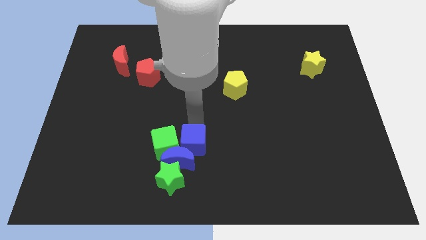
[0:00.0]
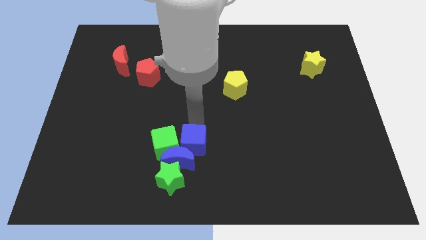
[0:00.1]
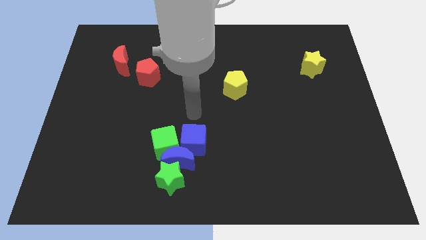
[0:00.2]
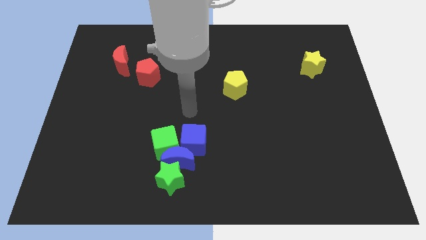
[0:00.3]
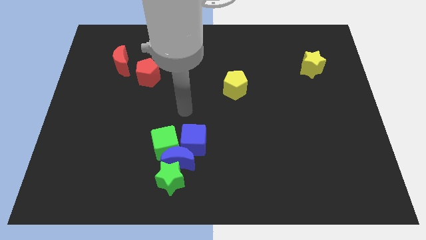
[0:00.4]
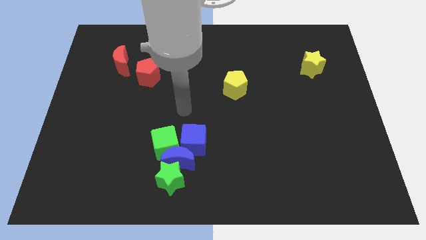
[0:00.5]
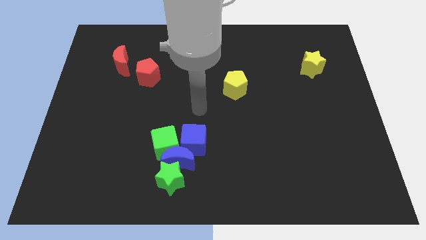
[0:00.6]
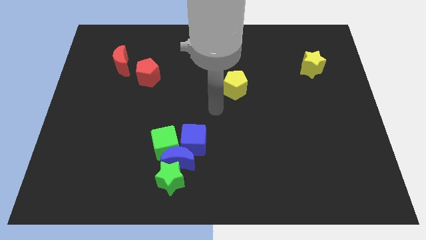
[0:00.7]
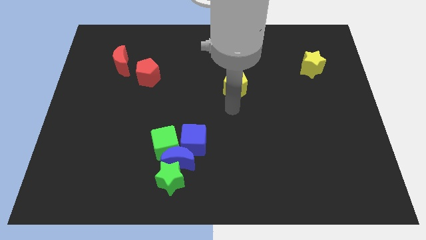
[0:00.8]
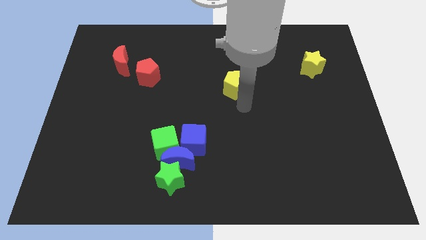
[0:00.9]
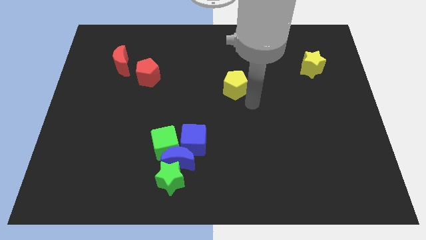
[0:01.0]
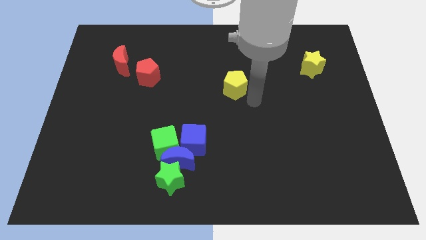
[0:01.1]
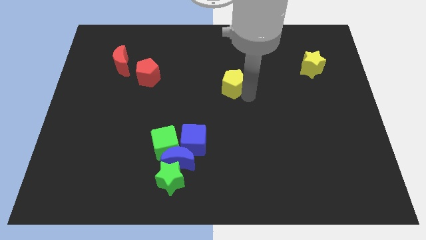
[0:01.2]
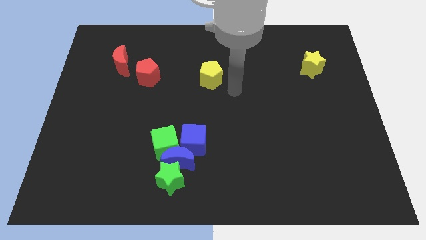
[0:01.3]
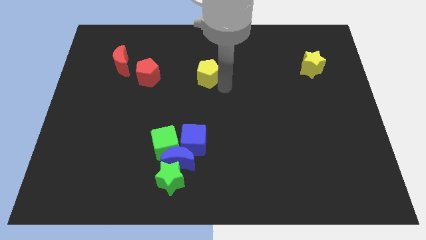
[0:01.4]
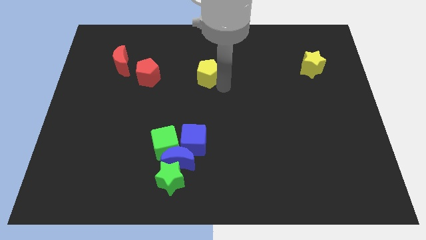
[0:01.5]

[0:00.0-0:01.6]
move the yellow pentagon to the top center of the board

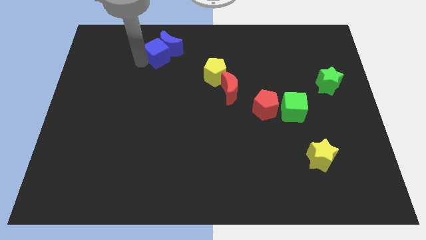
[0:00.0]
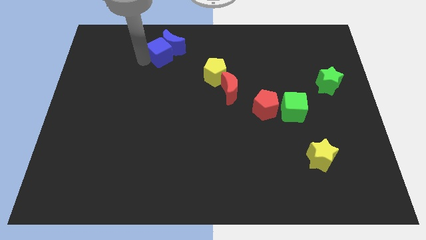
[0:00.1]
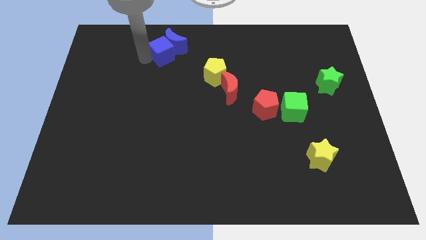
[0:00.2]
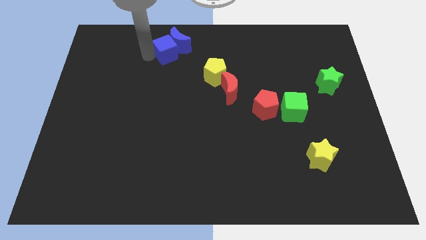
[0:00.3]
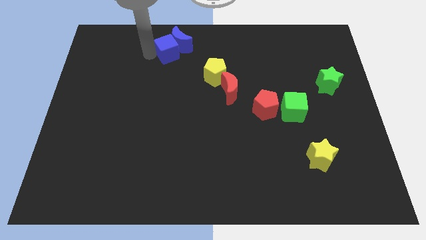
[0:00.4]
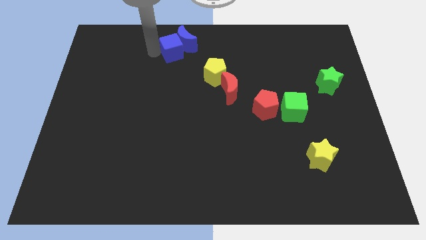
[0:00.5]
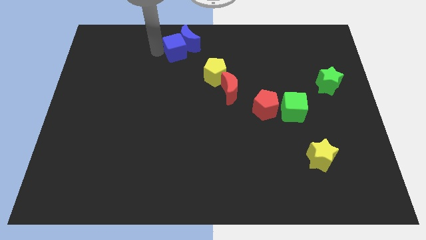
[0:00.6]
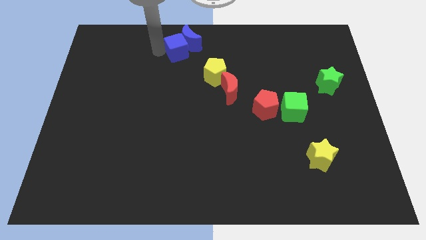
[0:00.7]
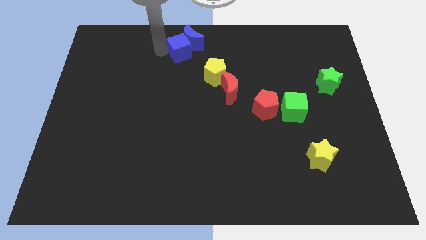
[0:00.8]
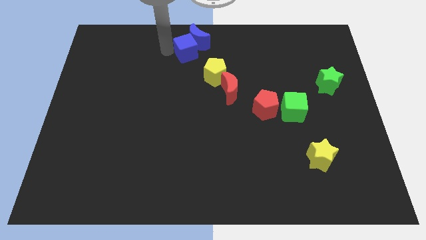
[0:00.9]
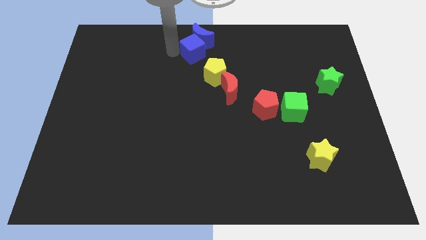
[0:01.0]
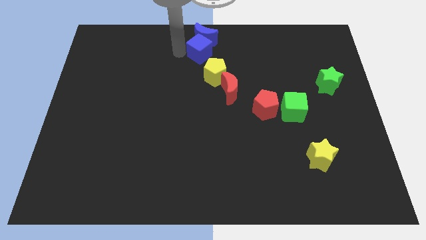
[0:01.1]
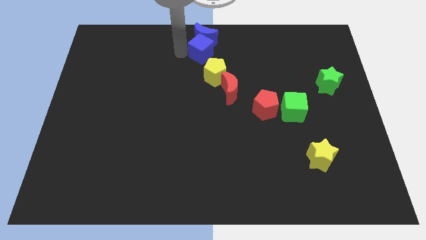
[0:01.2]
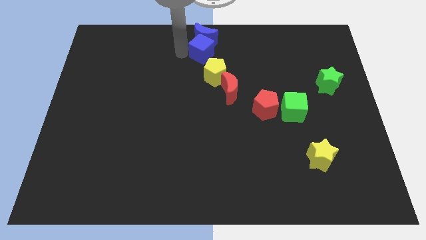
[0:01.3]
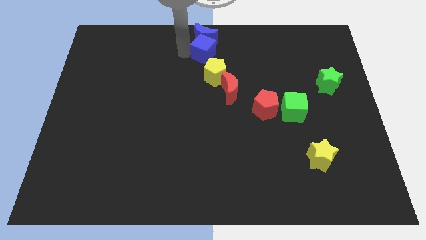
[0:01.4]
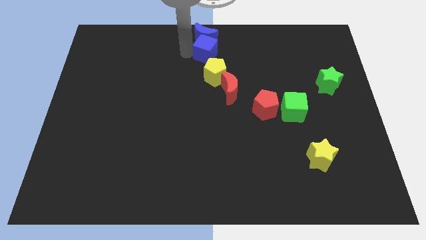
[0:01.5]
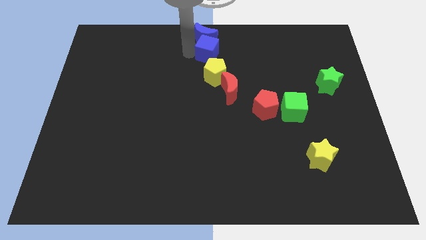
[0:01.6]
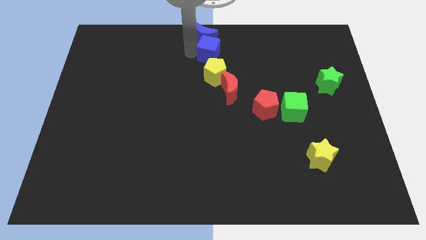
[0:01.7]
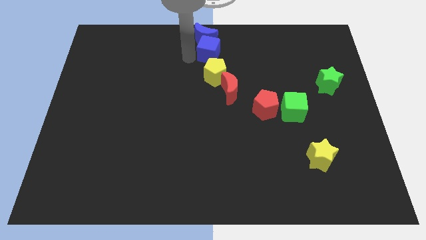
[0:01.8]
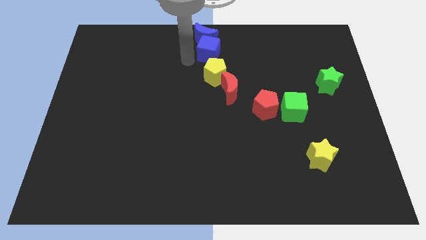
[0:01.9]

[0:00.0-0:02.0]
place the blue blocks above the yellow pentagon

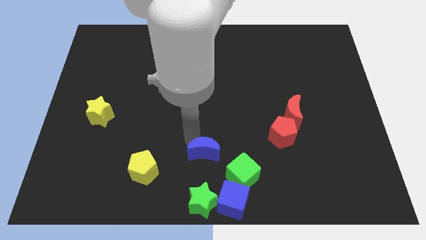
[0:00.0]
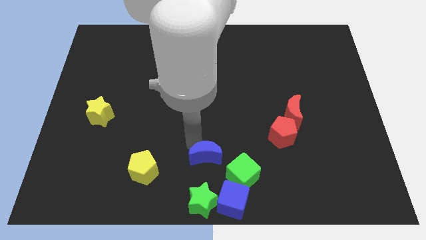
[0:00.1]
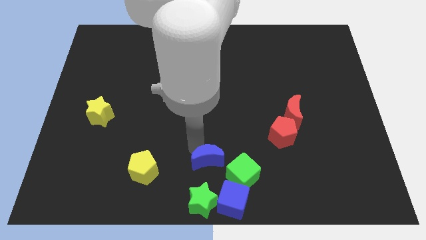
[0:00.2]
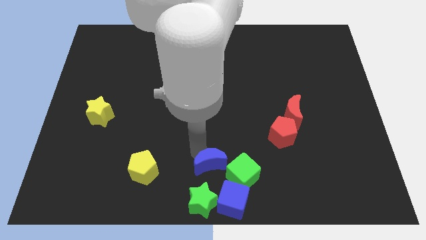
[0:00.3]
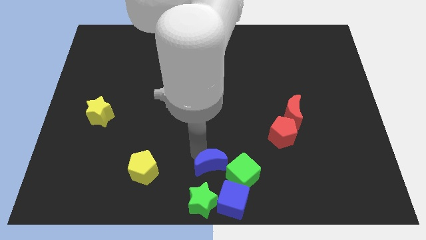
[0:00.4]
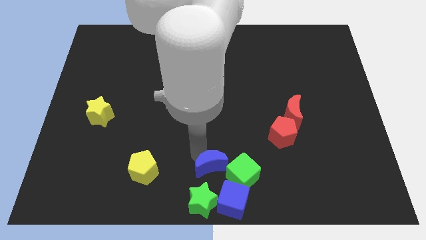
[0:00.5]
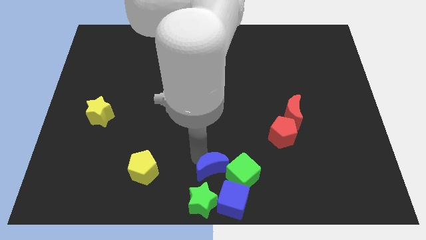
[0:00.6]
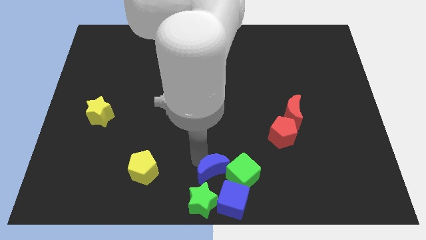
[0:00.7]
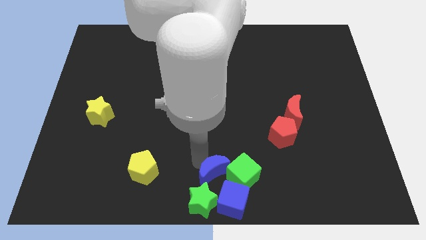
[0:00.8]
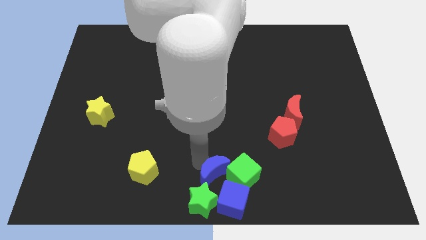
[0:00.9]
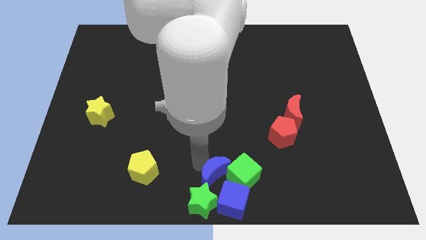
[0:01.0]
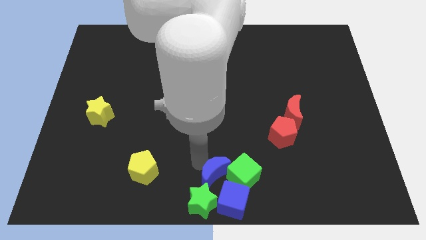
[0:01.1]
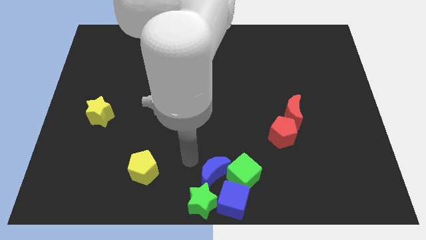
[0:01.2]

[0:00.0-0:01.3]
move the blue moon into the green cube and green star

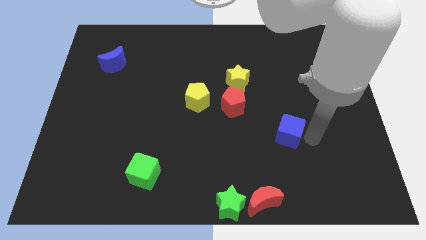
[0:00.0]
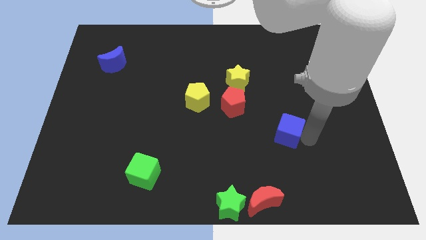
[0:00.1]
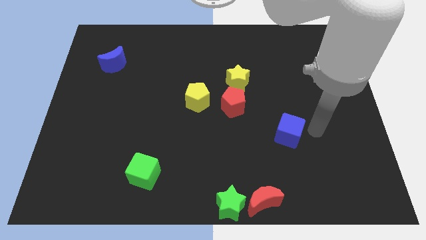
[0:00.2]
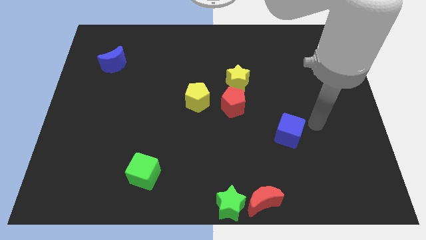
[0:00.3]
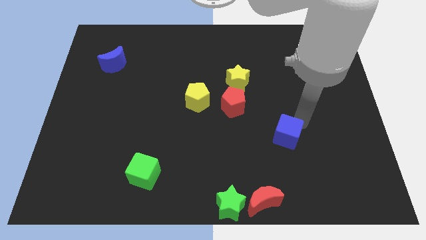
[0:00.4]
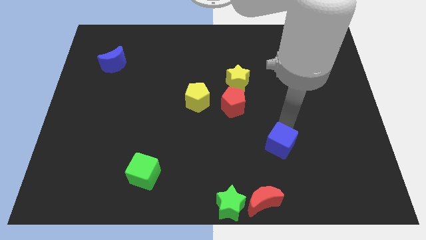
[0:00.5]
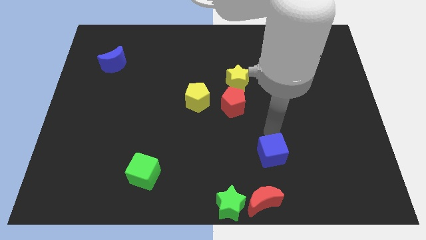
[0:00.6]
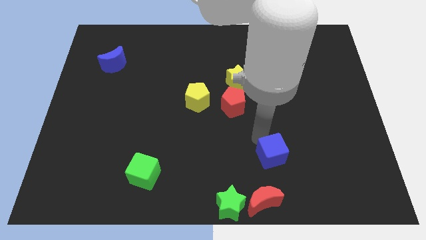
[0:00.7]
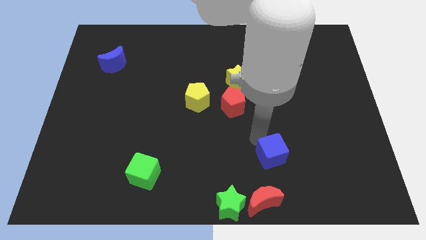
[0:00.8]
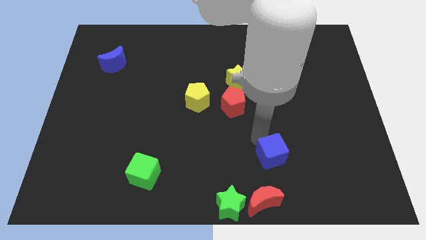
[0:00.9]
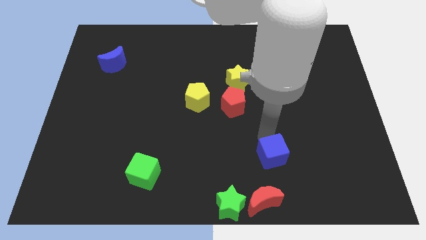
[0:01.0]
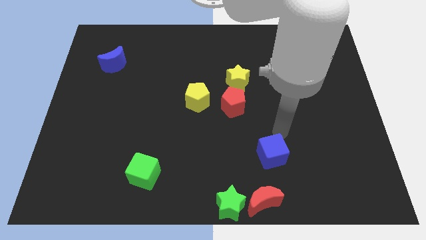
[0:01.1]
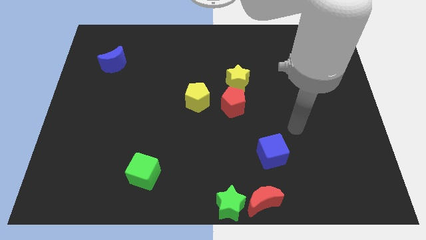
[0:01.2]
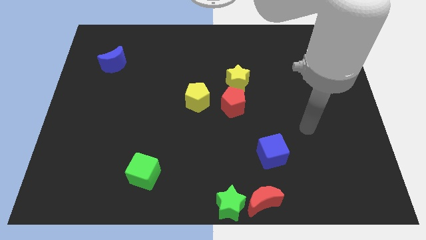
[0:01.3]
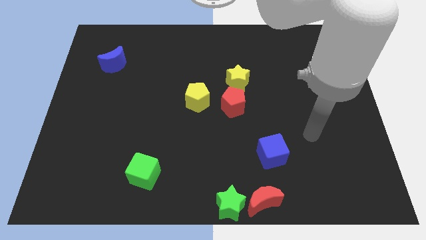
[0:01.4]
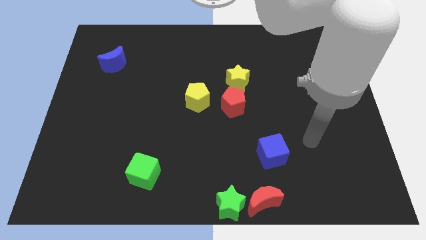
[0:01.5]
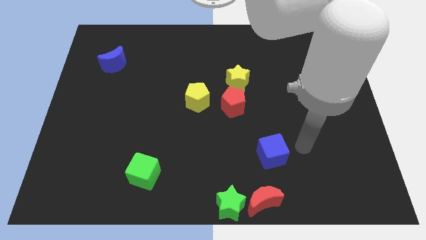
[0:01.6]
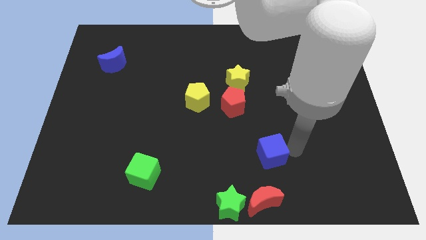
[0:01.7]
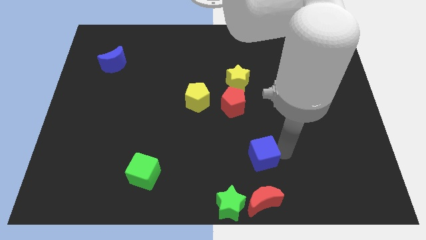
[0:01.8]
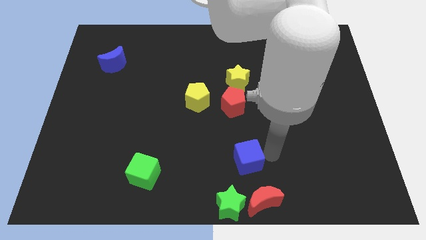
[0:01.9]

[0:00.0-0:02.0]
place the blue cube to the top side of the red crescent

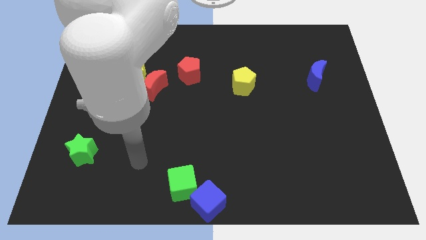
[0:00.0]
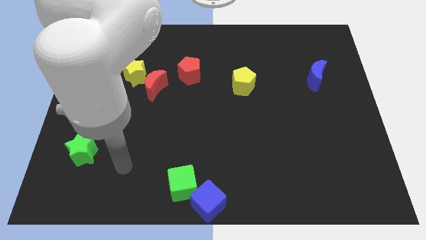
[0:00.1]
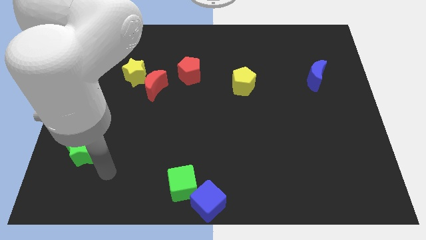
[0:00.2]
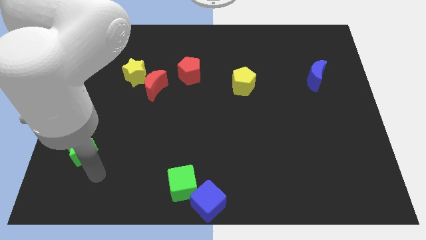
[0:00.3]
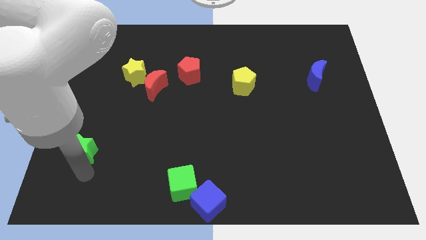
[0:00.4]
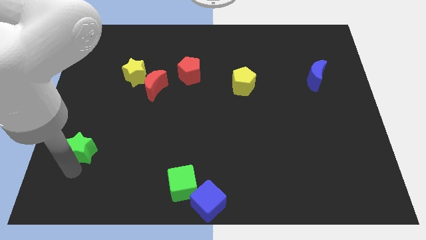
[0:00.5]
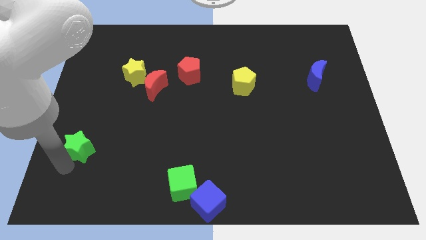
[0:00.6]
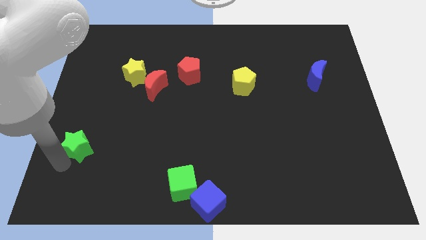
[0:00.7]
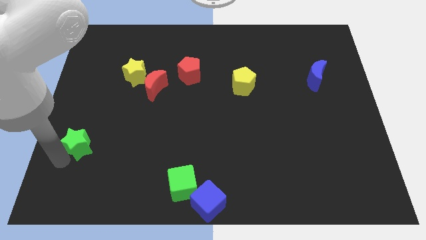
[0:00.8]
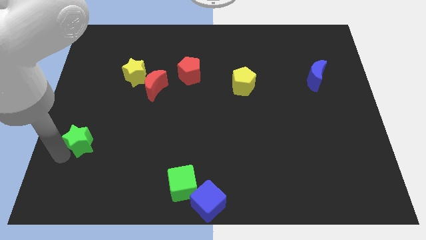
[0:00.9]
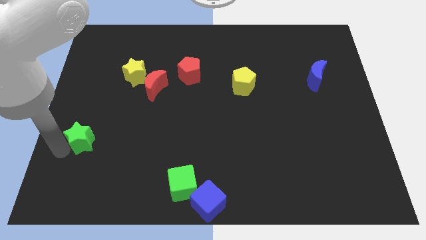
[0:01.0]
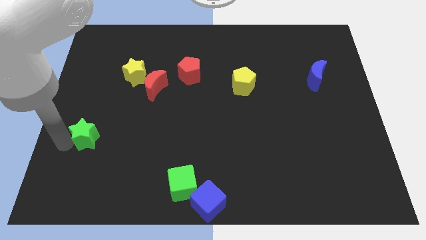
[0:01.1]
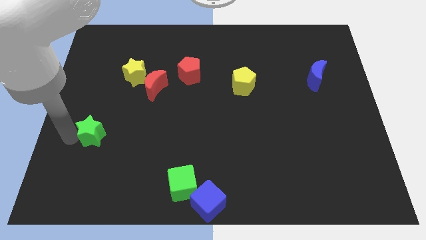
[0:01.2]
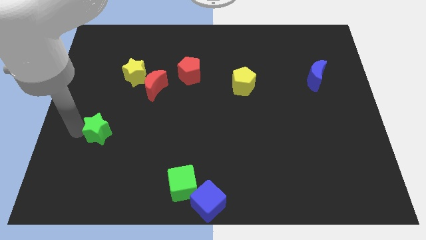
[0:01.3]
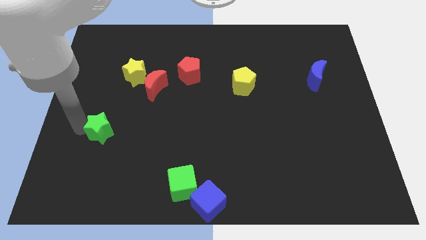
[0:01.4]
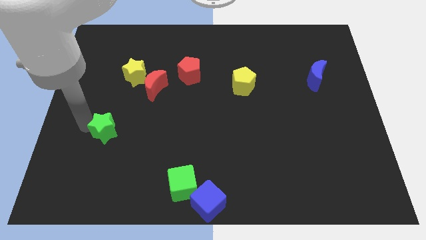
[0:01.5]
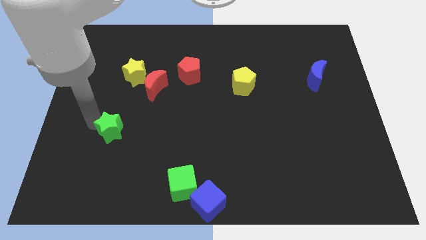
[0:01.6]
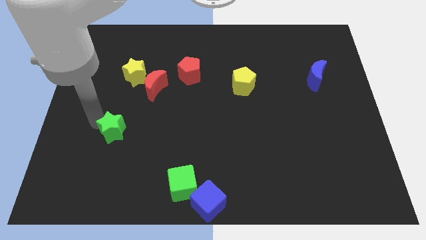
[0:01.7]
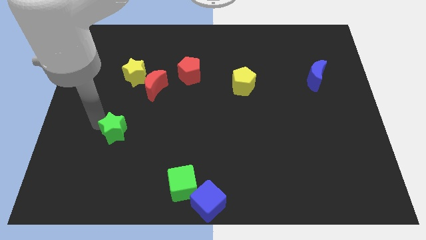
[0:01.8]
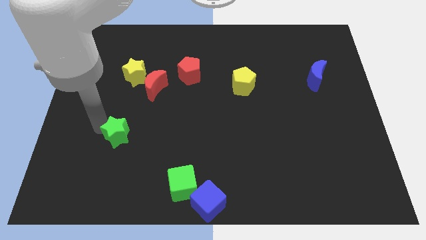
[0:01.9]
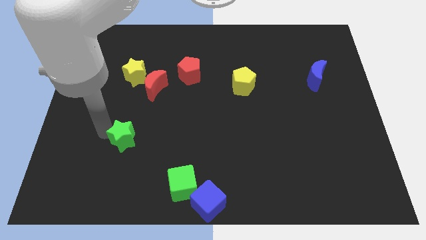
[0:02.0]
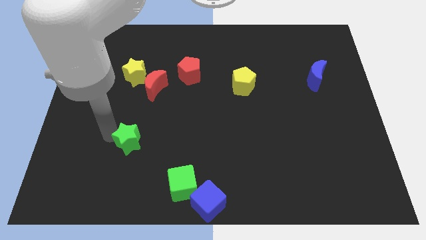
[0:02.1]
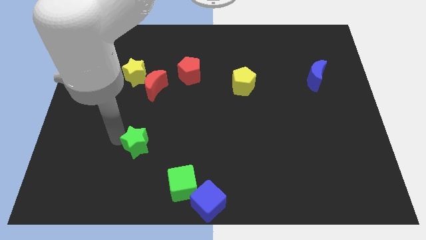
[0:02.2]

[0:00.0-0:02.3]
slightly push the green star towards the right to the board

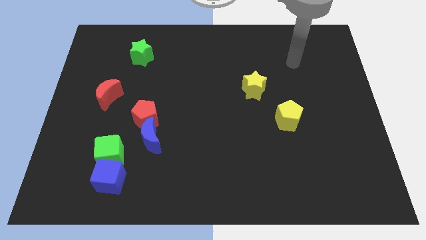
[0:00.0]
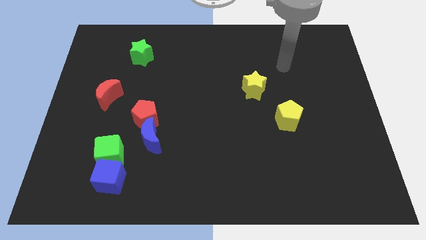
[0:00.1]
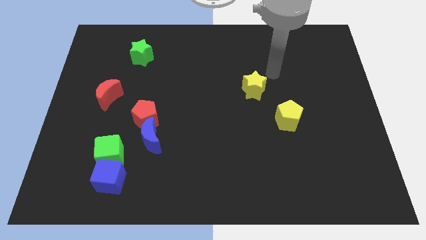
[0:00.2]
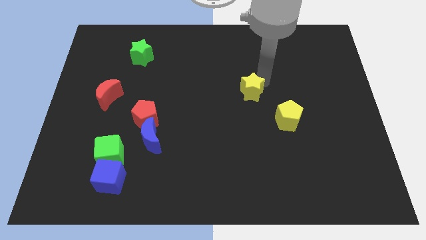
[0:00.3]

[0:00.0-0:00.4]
touch the yellow star with the arm
